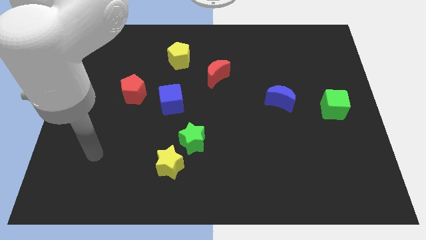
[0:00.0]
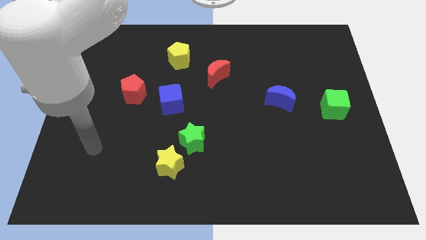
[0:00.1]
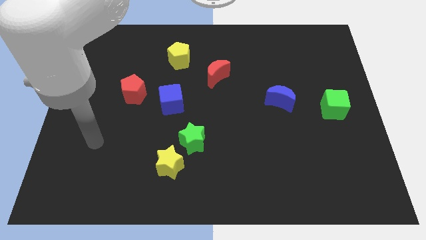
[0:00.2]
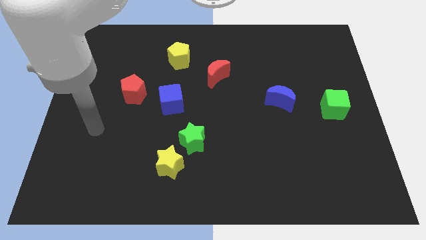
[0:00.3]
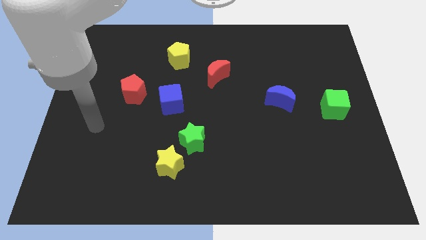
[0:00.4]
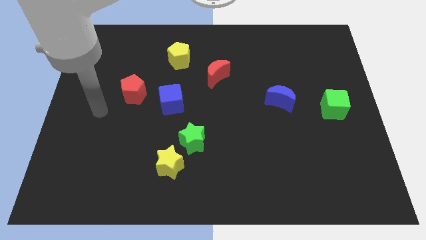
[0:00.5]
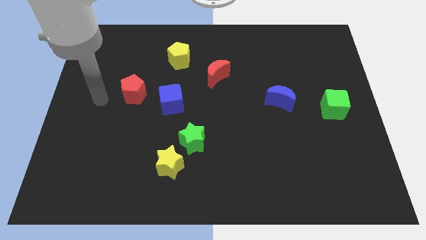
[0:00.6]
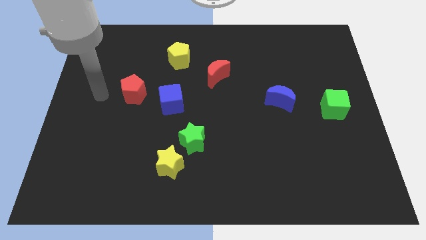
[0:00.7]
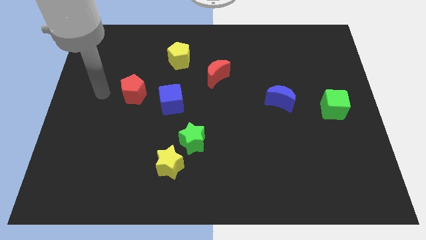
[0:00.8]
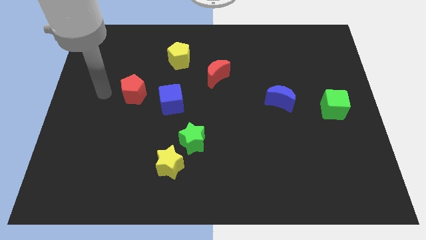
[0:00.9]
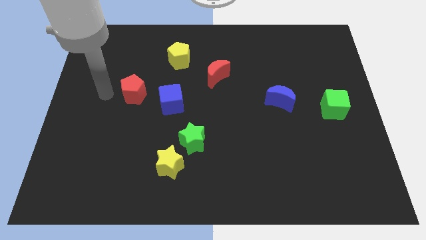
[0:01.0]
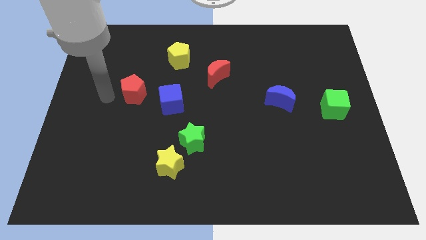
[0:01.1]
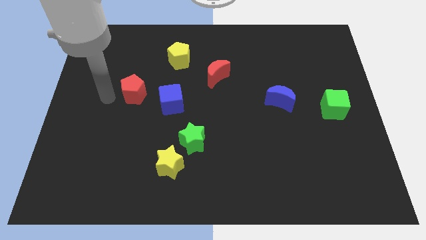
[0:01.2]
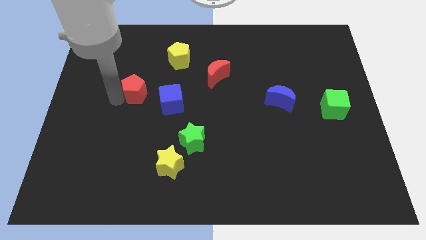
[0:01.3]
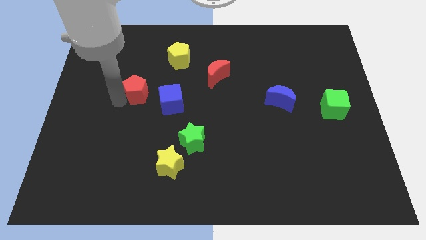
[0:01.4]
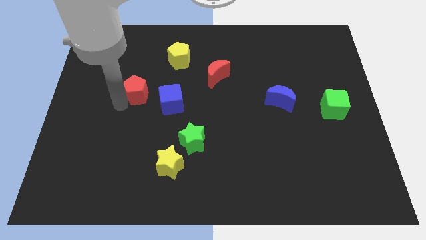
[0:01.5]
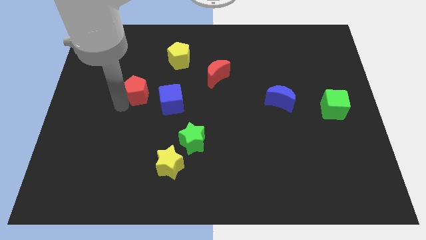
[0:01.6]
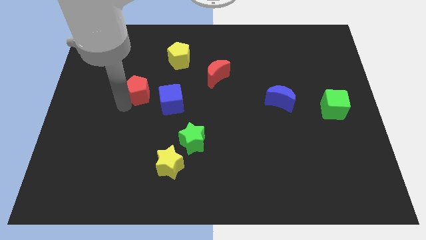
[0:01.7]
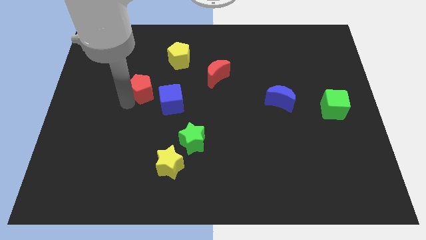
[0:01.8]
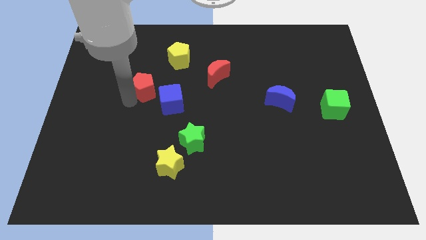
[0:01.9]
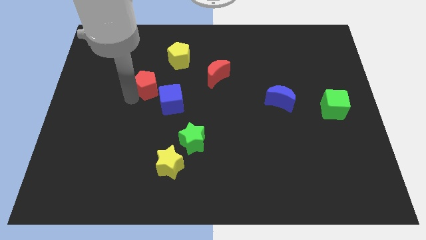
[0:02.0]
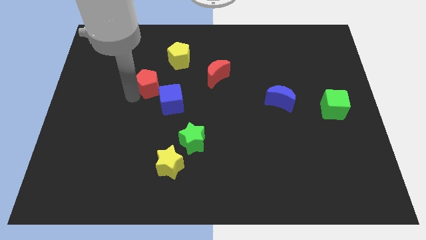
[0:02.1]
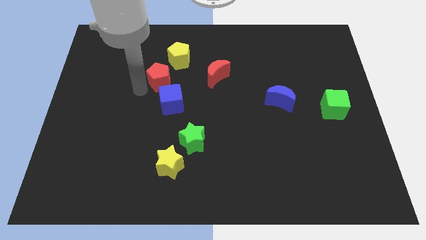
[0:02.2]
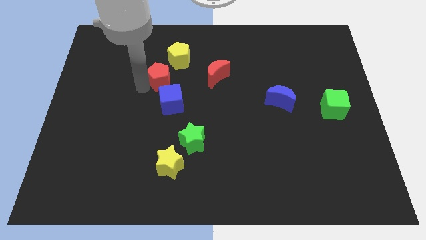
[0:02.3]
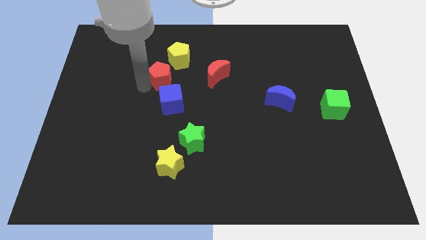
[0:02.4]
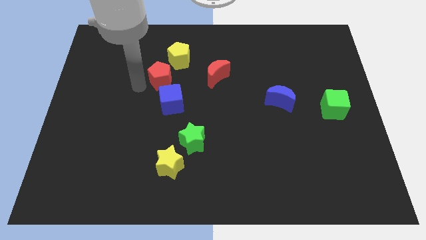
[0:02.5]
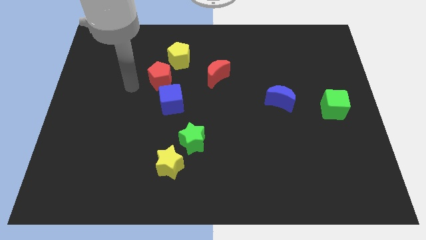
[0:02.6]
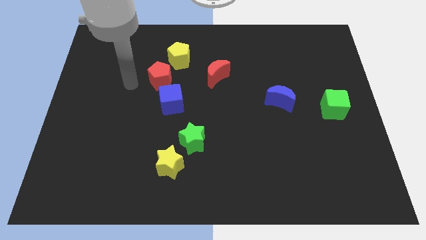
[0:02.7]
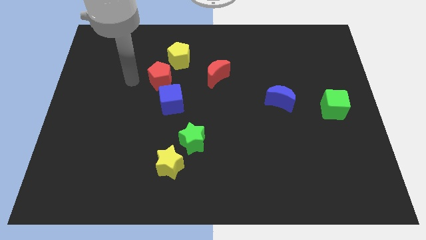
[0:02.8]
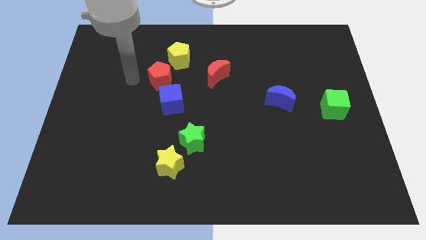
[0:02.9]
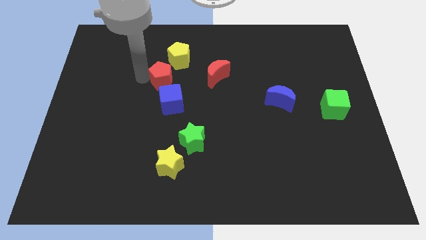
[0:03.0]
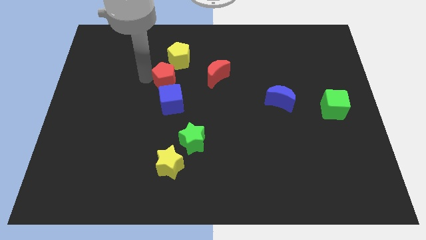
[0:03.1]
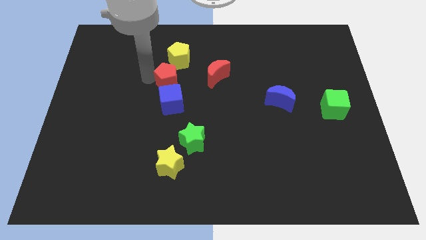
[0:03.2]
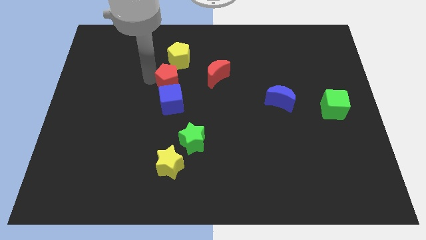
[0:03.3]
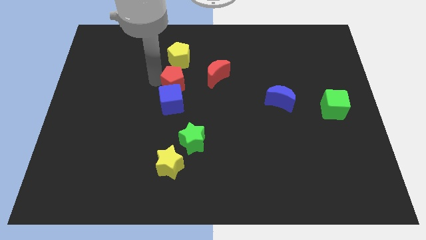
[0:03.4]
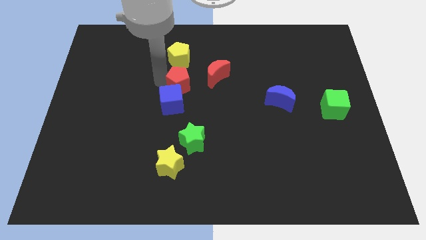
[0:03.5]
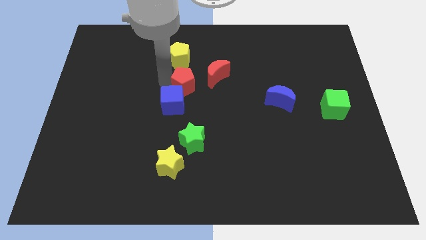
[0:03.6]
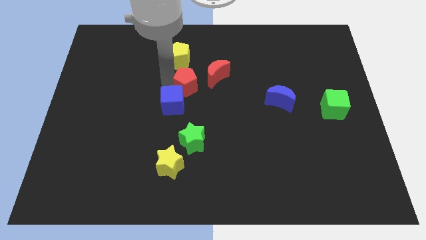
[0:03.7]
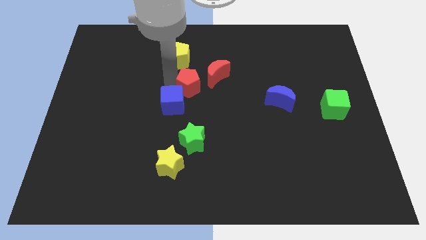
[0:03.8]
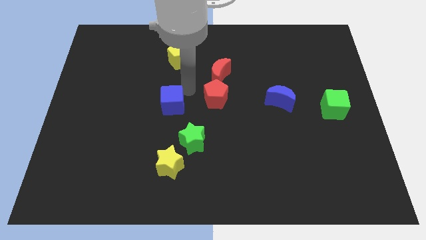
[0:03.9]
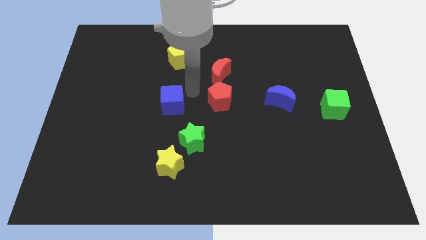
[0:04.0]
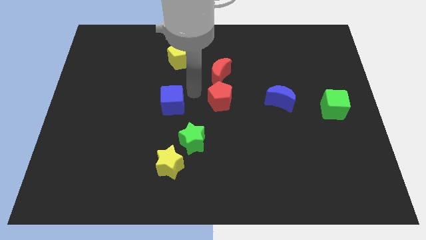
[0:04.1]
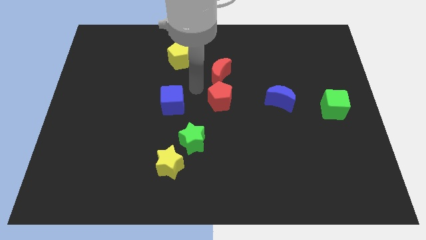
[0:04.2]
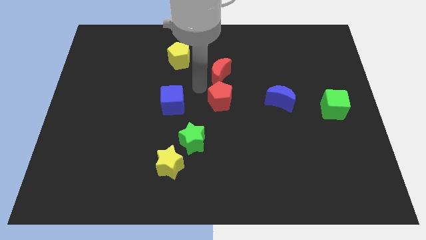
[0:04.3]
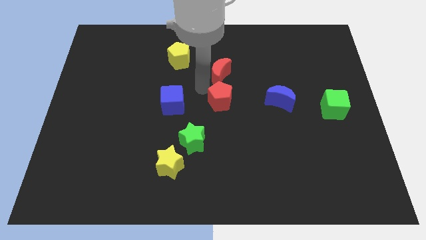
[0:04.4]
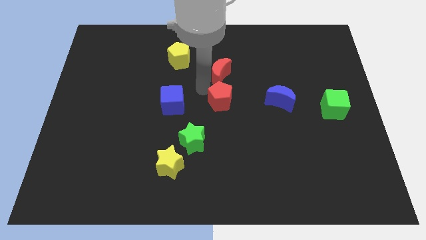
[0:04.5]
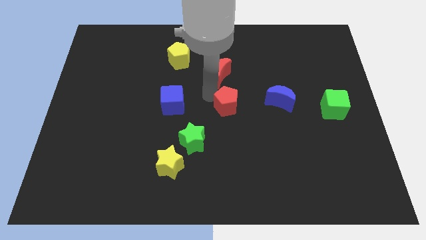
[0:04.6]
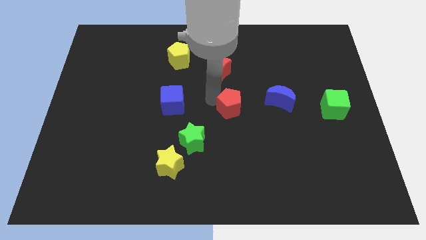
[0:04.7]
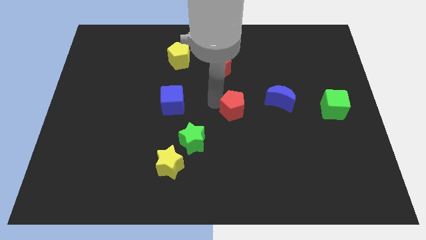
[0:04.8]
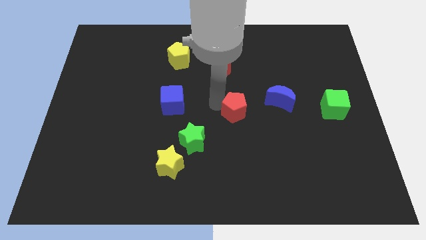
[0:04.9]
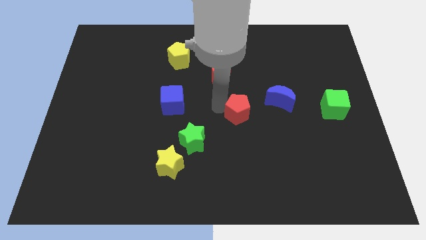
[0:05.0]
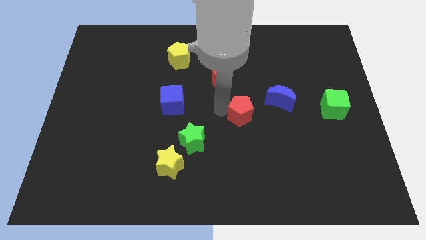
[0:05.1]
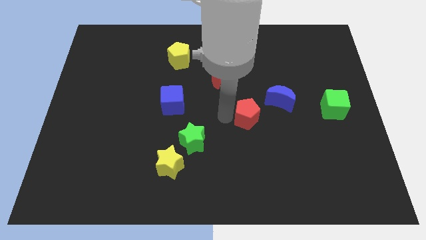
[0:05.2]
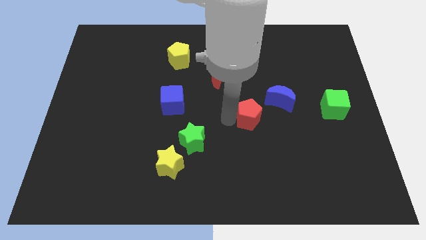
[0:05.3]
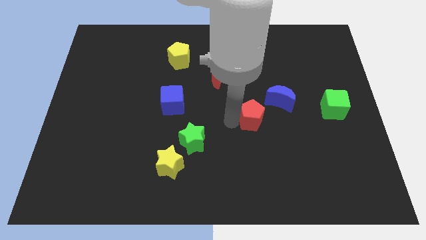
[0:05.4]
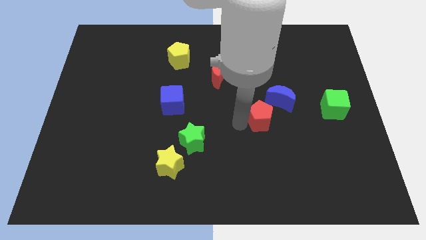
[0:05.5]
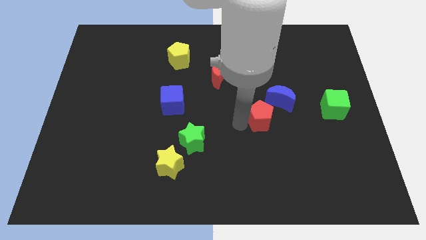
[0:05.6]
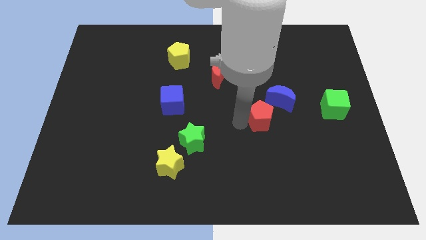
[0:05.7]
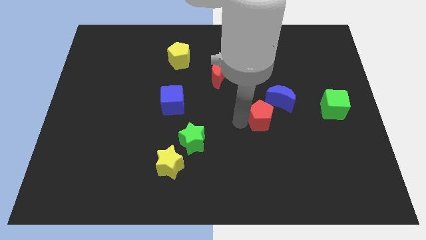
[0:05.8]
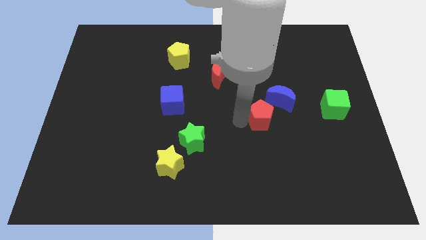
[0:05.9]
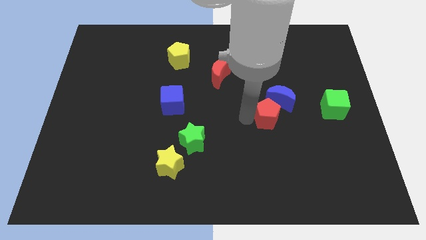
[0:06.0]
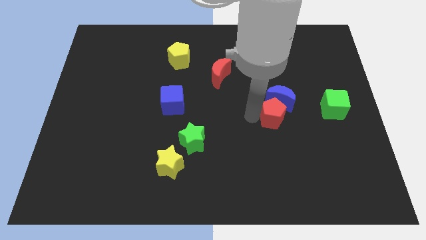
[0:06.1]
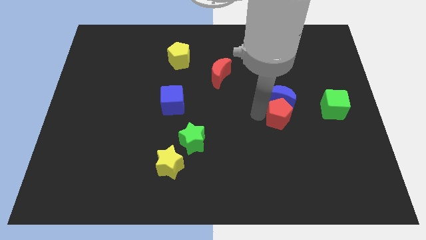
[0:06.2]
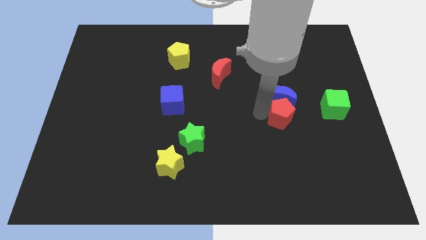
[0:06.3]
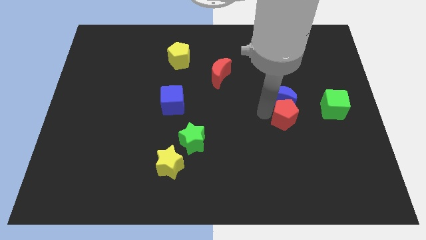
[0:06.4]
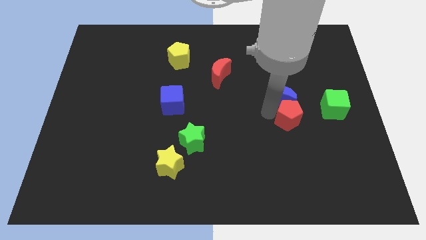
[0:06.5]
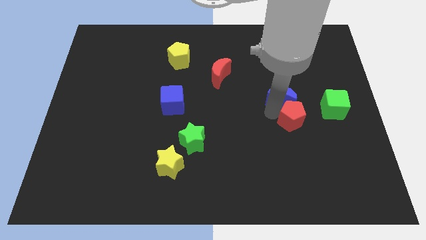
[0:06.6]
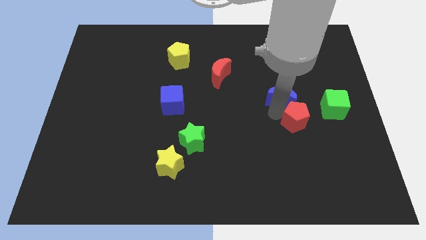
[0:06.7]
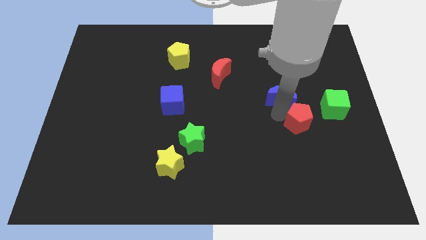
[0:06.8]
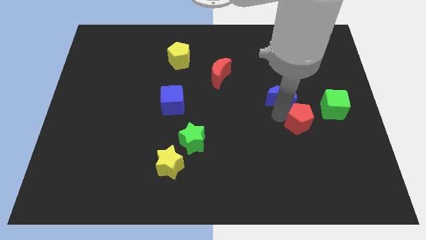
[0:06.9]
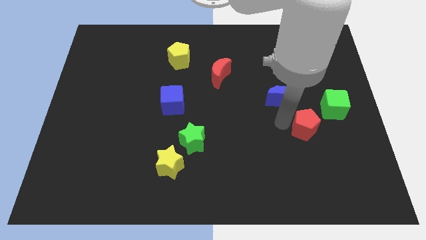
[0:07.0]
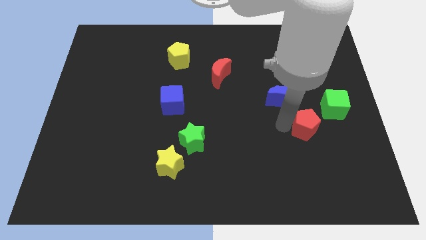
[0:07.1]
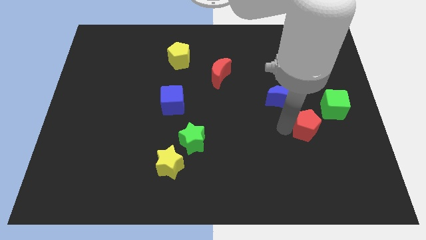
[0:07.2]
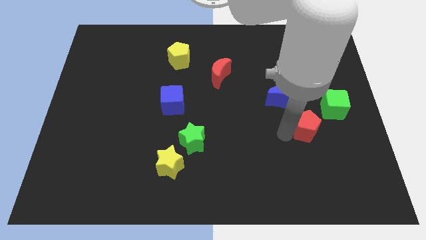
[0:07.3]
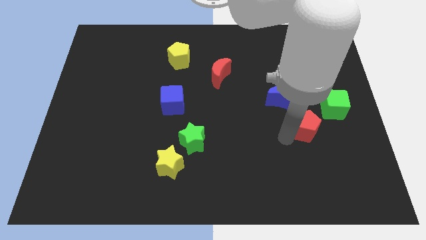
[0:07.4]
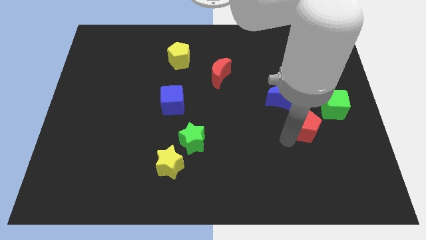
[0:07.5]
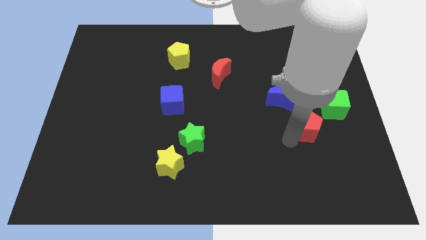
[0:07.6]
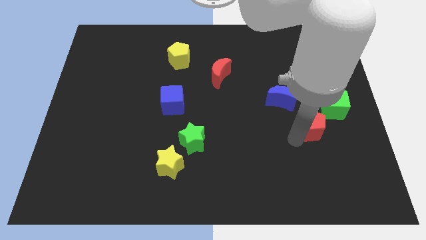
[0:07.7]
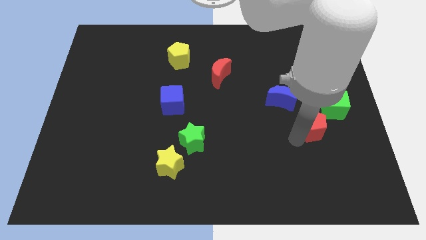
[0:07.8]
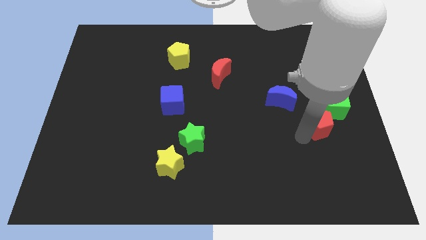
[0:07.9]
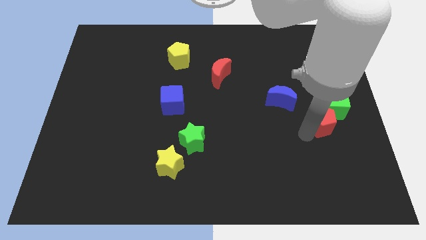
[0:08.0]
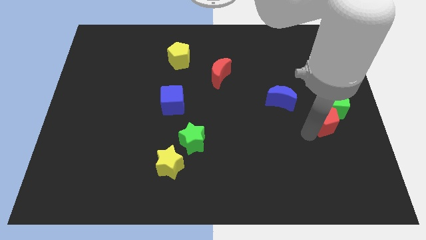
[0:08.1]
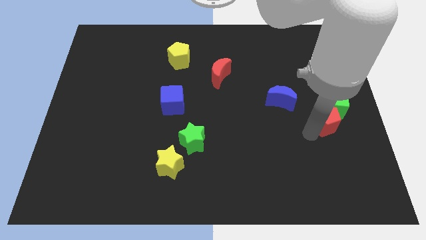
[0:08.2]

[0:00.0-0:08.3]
put the red pentagon to the green cube
